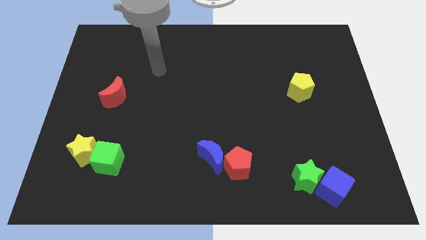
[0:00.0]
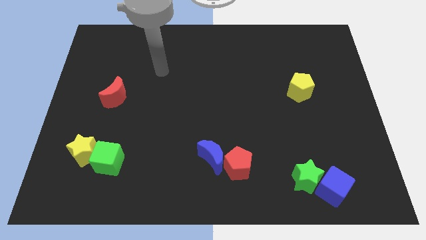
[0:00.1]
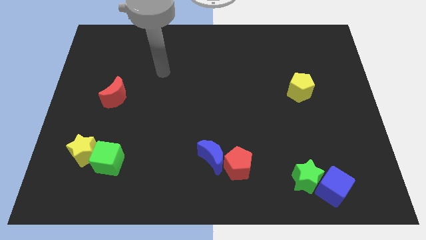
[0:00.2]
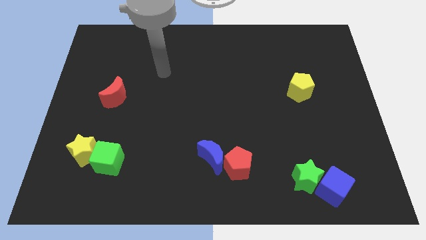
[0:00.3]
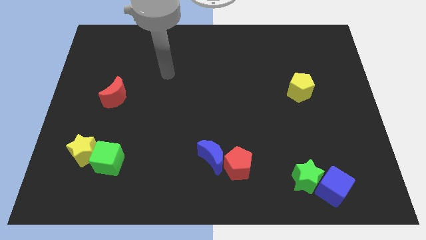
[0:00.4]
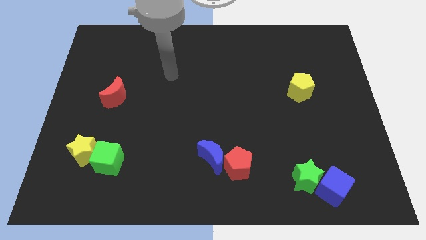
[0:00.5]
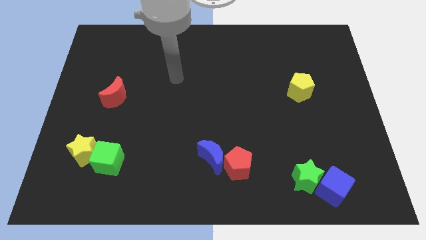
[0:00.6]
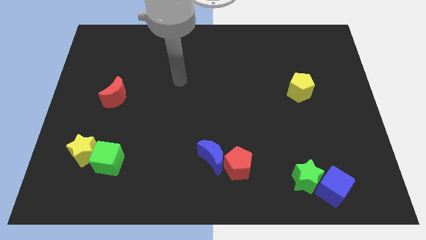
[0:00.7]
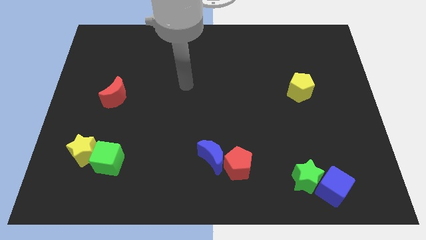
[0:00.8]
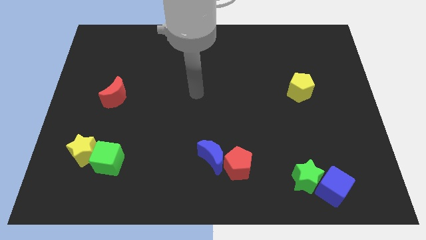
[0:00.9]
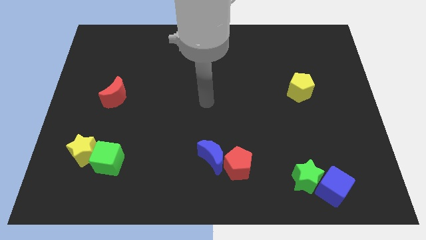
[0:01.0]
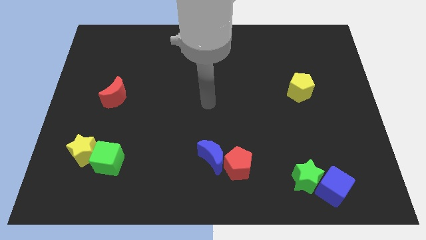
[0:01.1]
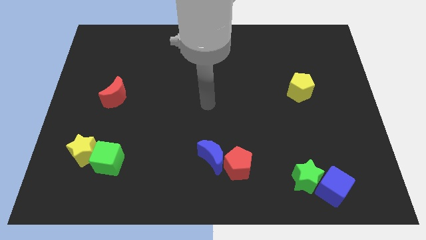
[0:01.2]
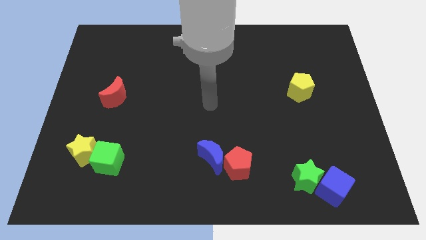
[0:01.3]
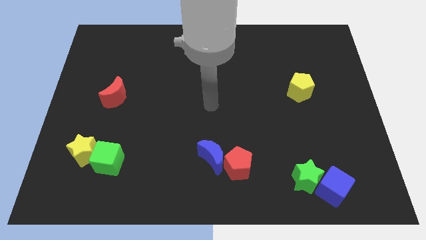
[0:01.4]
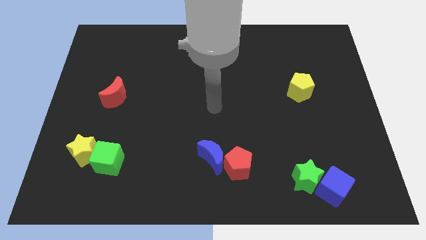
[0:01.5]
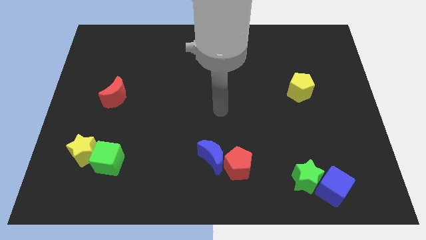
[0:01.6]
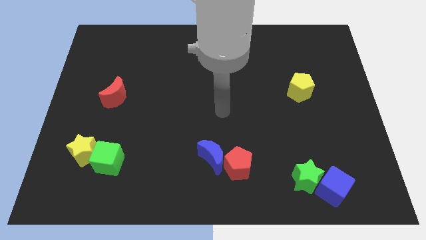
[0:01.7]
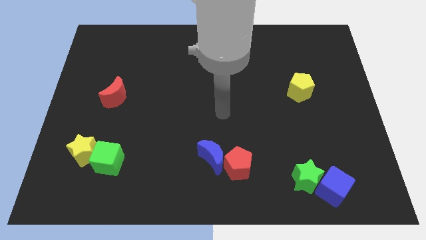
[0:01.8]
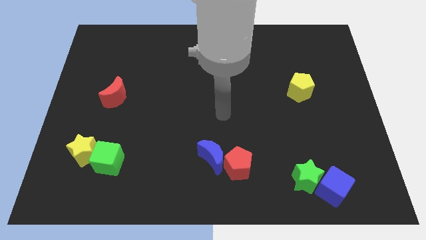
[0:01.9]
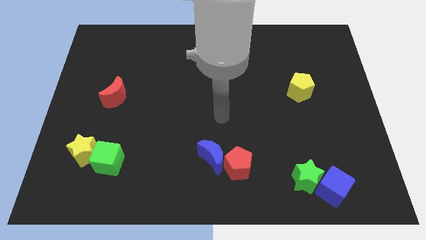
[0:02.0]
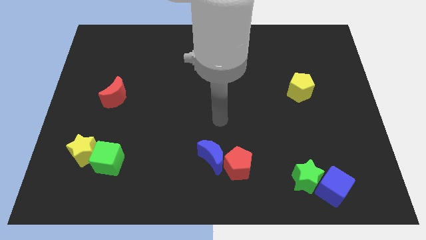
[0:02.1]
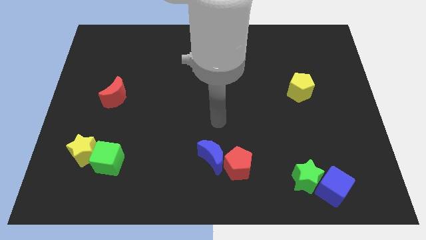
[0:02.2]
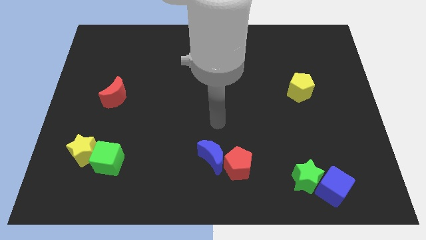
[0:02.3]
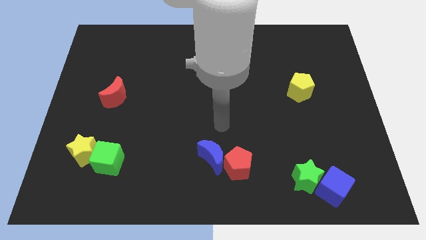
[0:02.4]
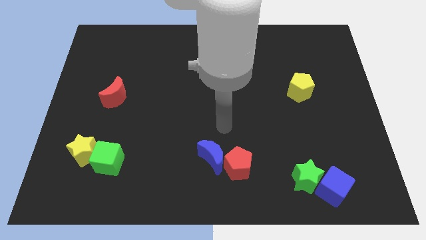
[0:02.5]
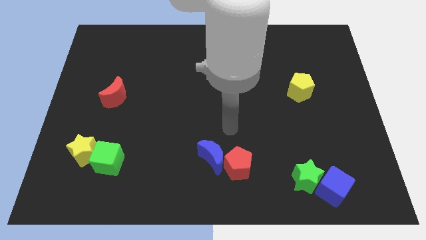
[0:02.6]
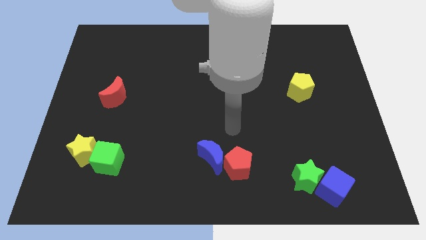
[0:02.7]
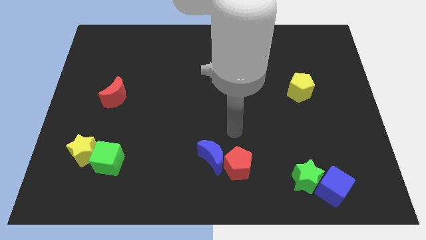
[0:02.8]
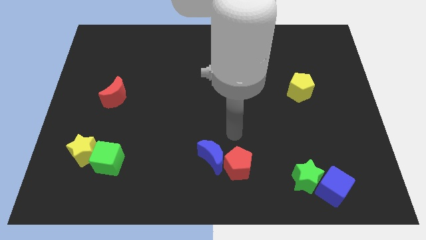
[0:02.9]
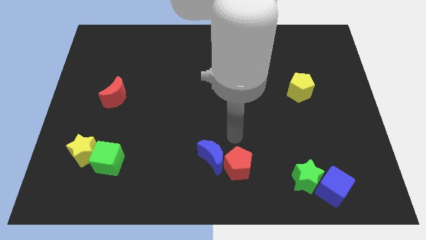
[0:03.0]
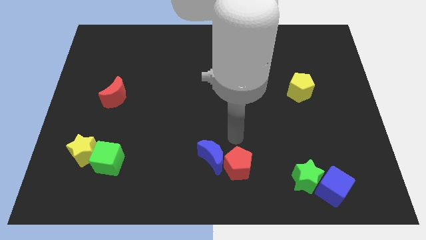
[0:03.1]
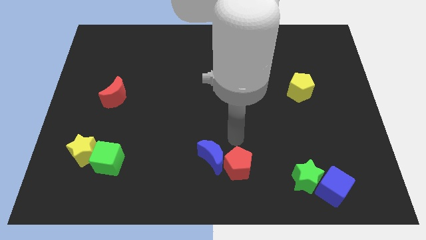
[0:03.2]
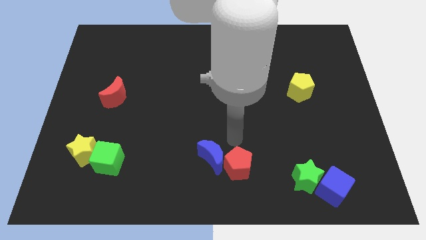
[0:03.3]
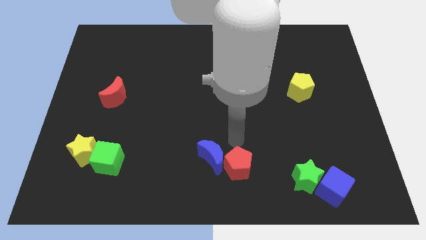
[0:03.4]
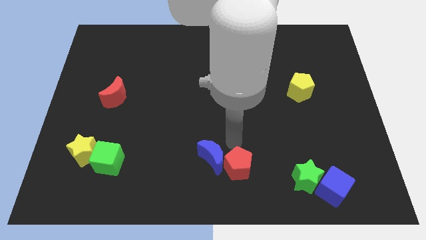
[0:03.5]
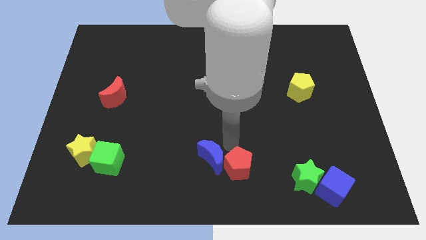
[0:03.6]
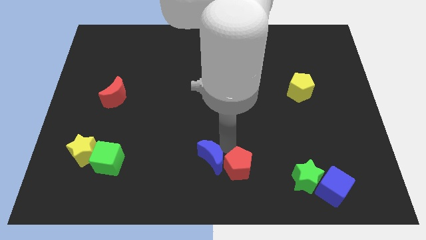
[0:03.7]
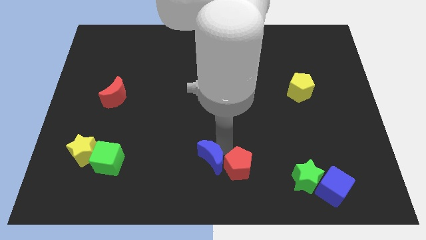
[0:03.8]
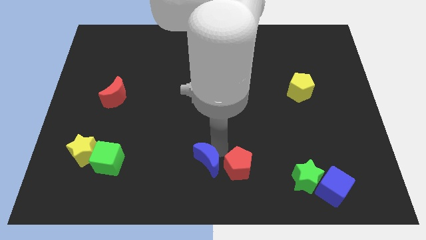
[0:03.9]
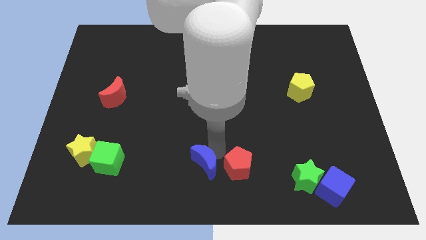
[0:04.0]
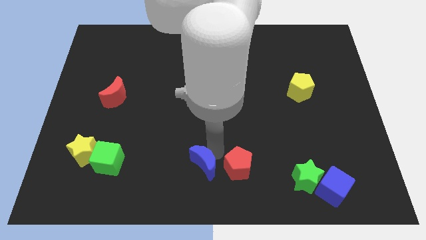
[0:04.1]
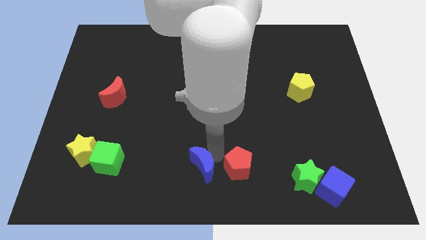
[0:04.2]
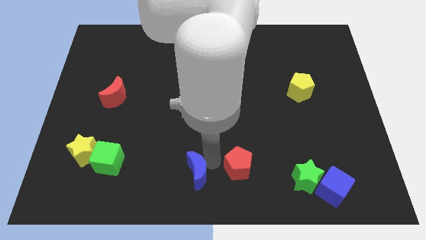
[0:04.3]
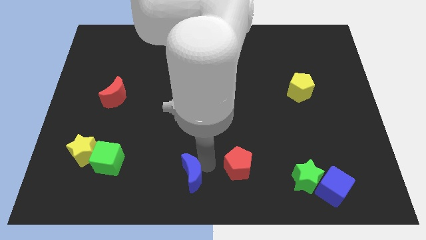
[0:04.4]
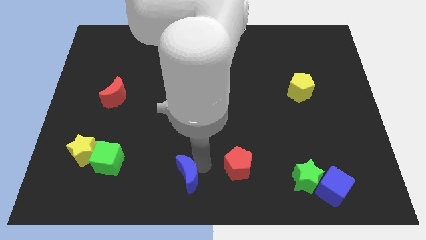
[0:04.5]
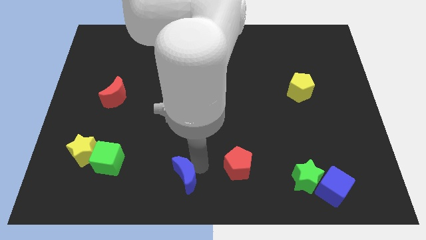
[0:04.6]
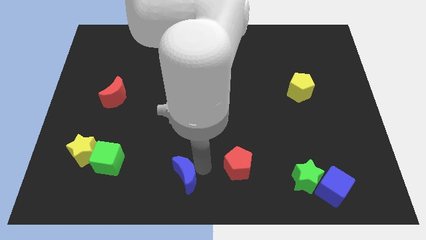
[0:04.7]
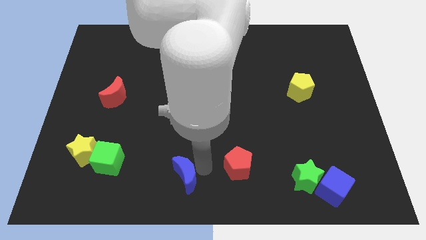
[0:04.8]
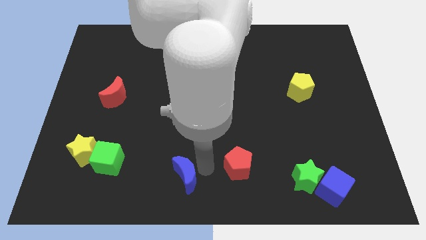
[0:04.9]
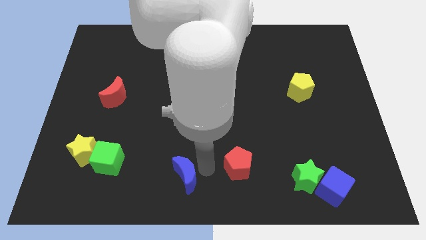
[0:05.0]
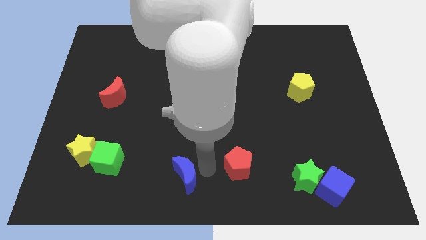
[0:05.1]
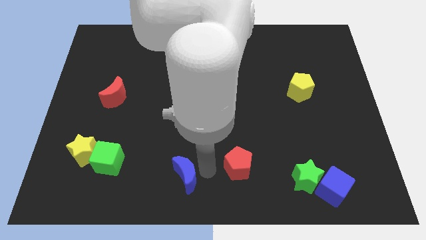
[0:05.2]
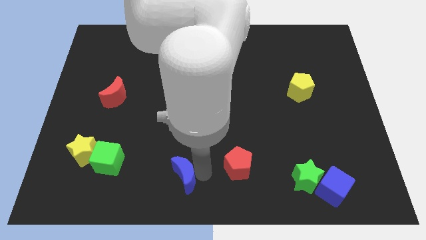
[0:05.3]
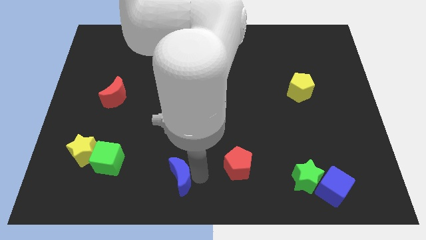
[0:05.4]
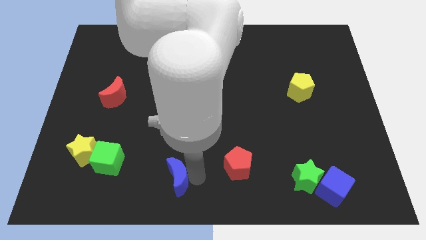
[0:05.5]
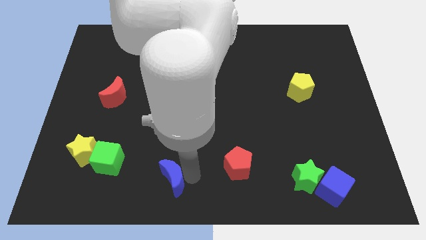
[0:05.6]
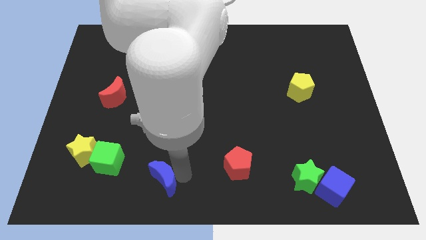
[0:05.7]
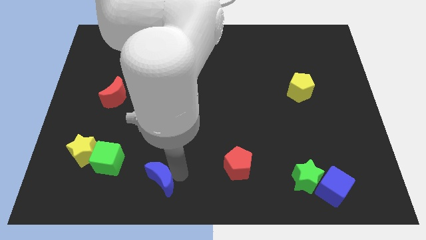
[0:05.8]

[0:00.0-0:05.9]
separate the blue crescent from the red pentagon

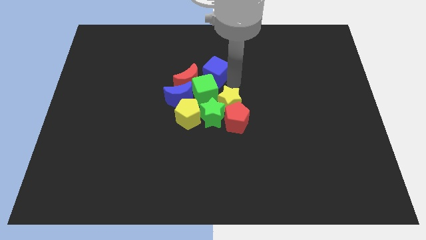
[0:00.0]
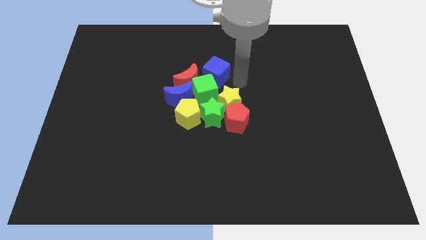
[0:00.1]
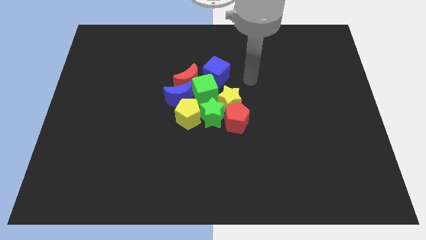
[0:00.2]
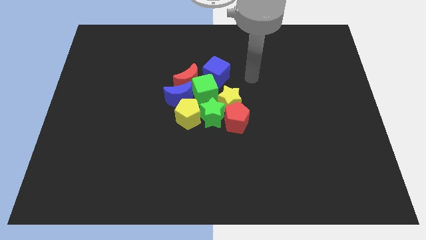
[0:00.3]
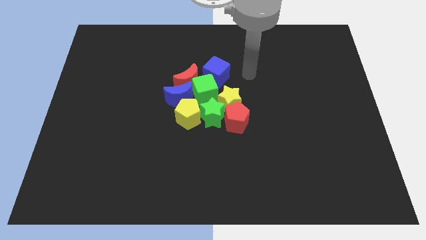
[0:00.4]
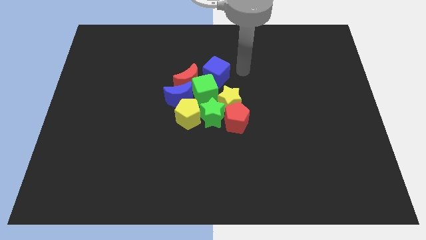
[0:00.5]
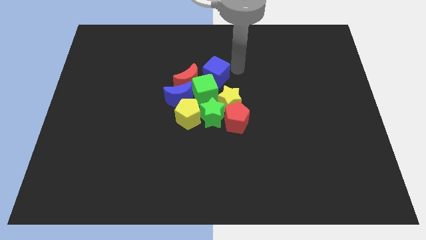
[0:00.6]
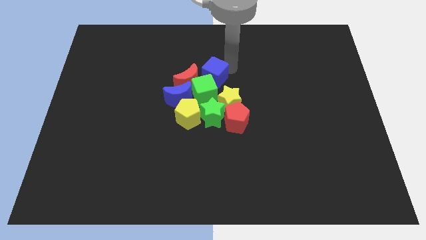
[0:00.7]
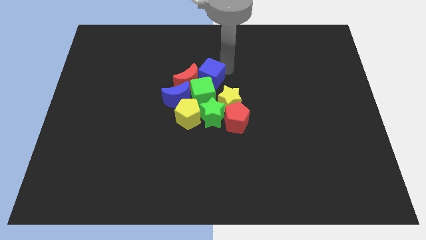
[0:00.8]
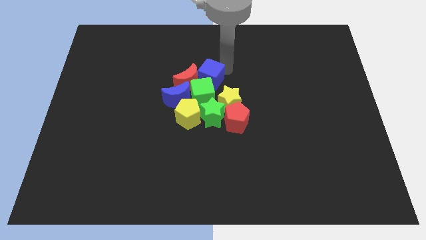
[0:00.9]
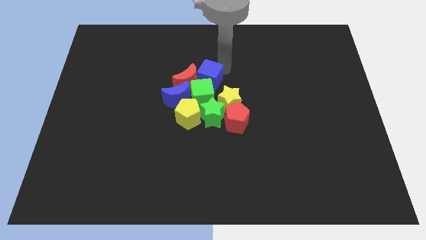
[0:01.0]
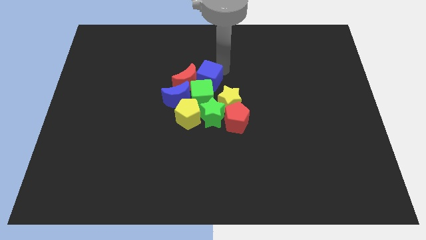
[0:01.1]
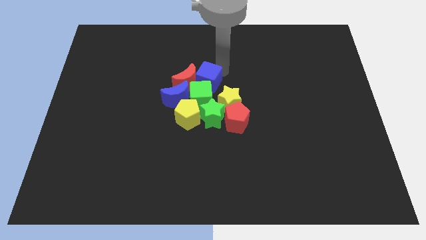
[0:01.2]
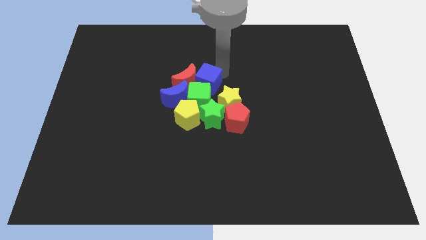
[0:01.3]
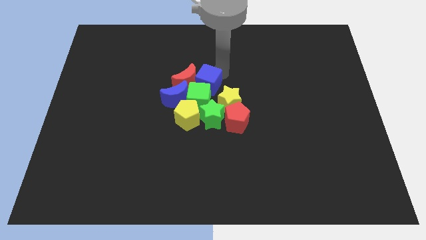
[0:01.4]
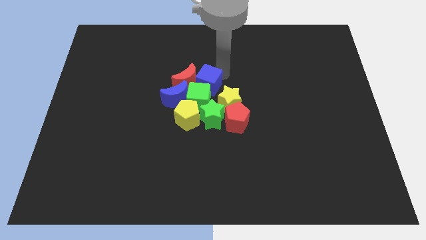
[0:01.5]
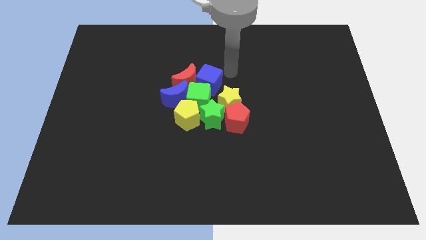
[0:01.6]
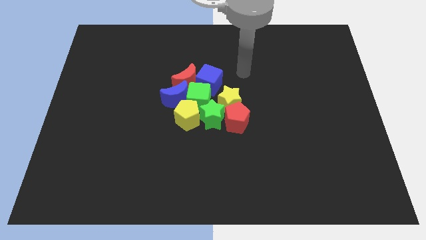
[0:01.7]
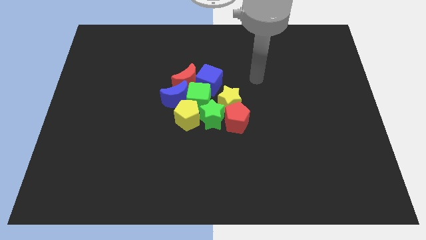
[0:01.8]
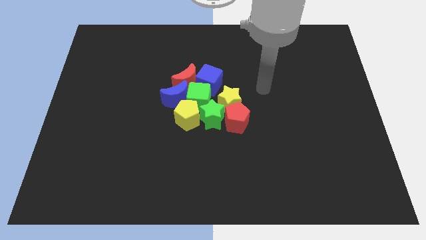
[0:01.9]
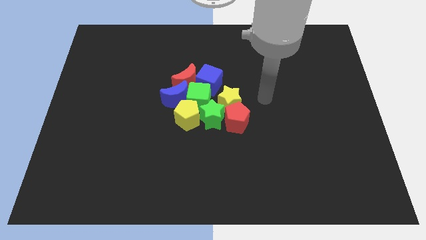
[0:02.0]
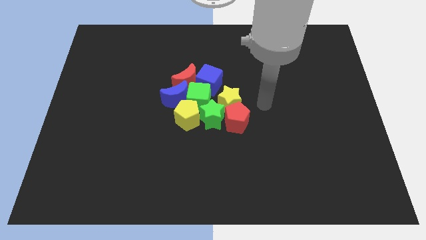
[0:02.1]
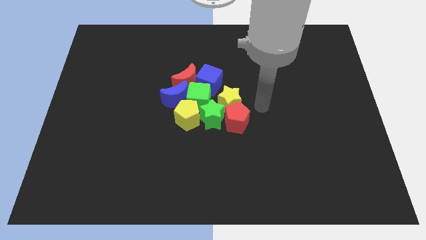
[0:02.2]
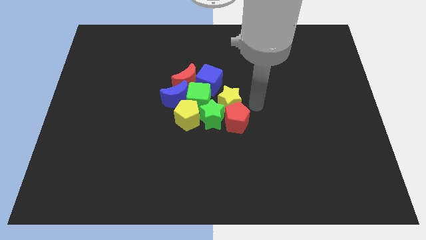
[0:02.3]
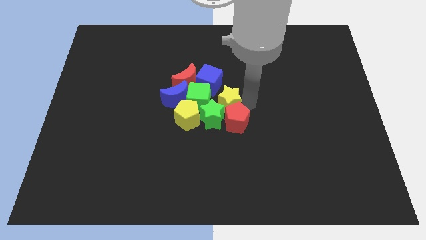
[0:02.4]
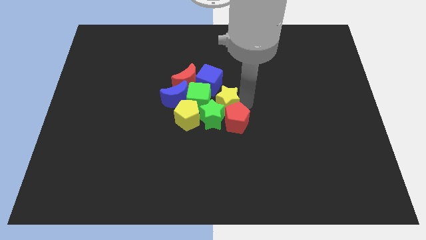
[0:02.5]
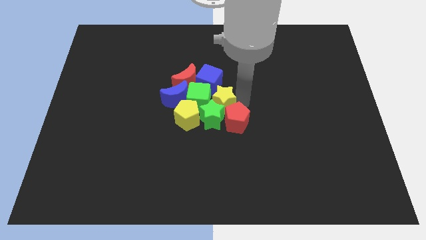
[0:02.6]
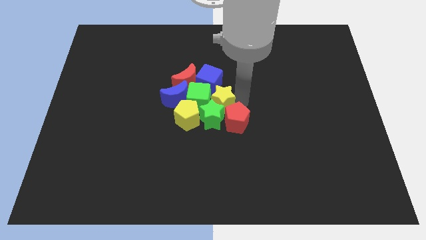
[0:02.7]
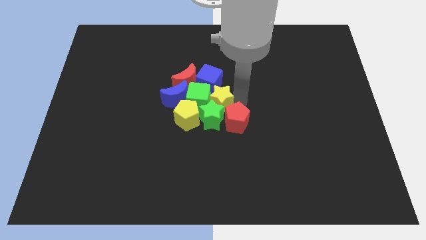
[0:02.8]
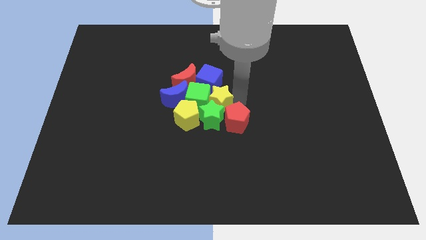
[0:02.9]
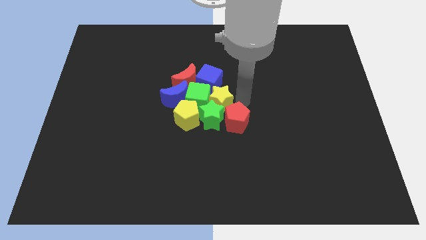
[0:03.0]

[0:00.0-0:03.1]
move the blue cube slightly to the bottom
